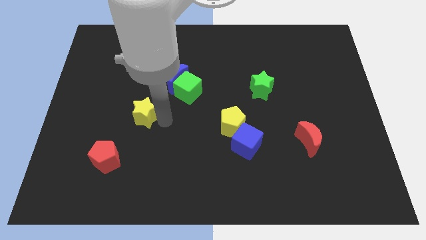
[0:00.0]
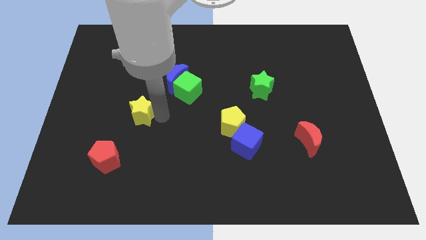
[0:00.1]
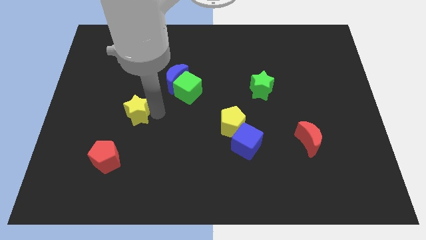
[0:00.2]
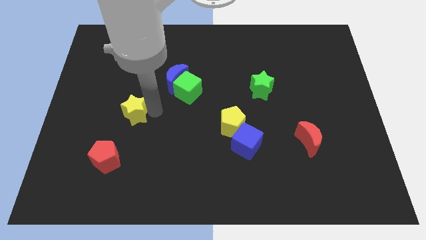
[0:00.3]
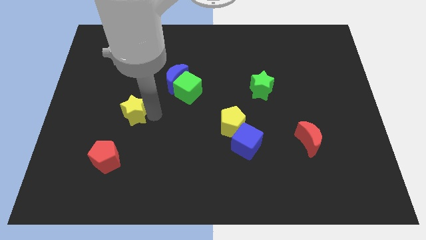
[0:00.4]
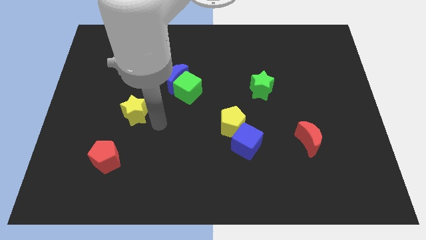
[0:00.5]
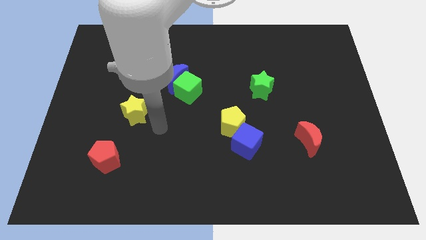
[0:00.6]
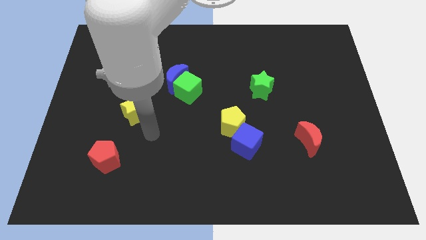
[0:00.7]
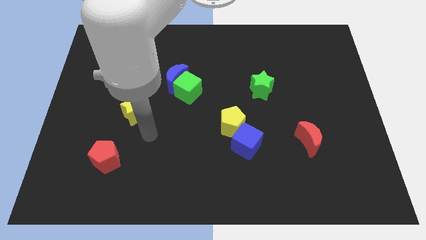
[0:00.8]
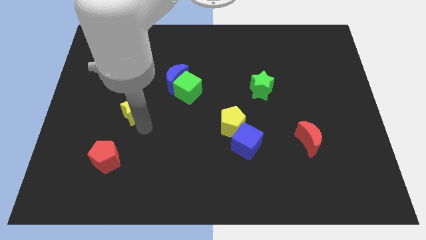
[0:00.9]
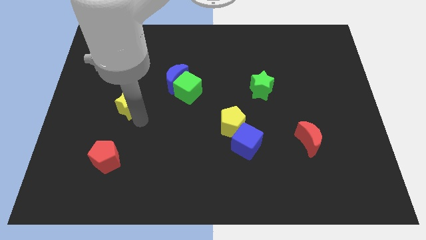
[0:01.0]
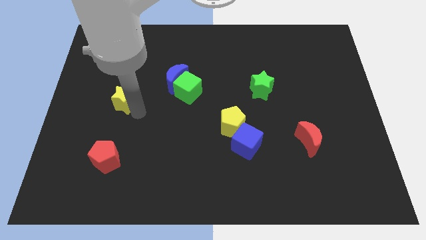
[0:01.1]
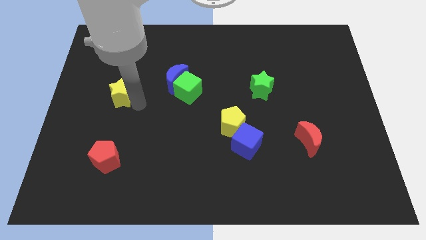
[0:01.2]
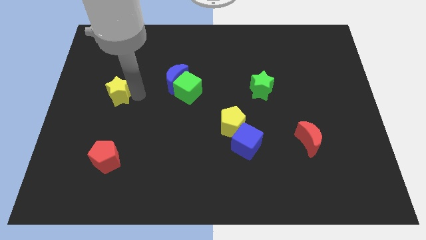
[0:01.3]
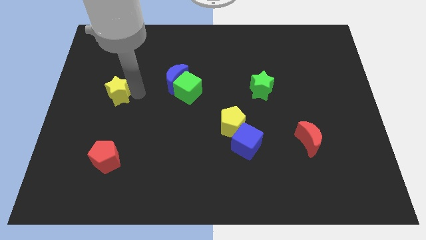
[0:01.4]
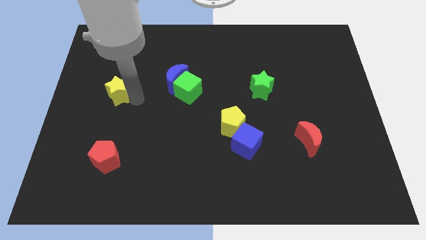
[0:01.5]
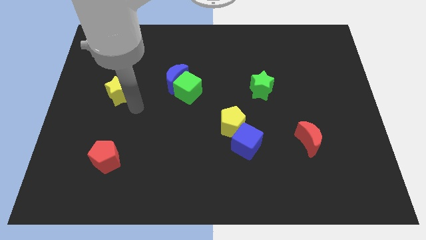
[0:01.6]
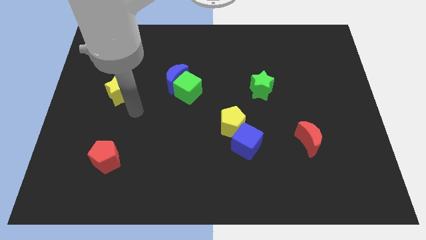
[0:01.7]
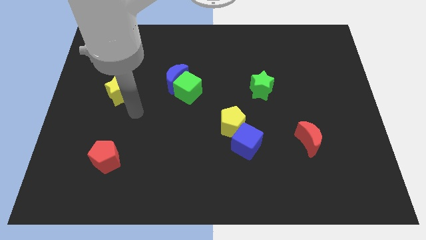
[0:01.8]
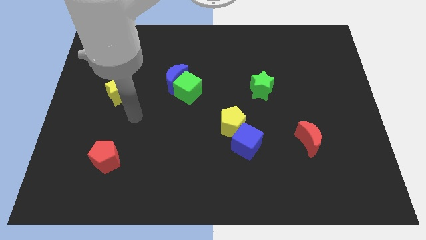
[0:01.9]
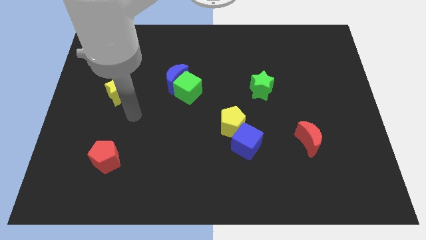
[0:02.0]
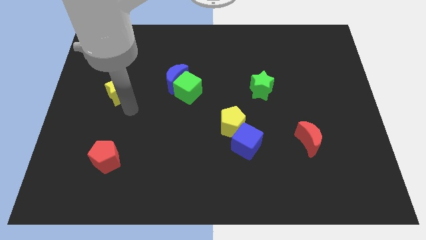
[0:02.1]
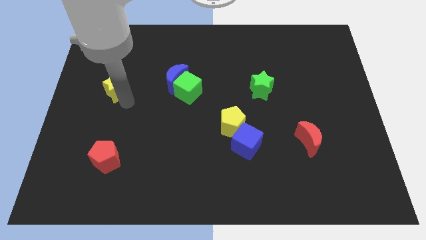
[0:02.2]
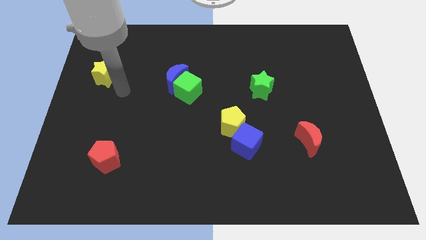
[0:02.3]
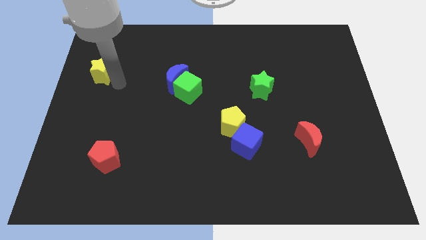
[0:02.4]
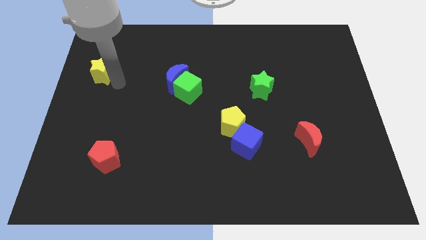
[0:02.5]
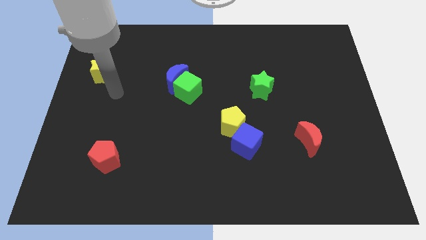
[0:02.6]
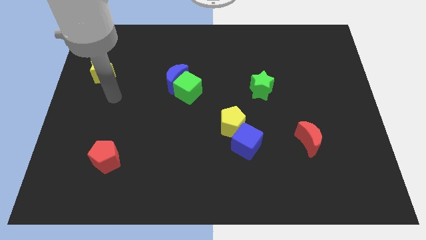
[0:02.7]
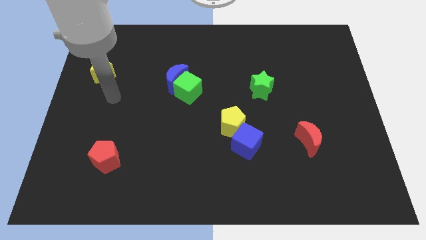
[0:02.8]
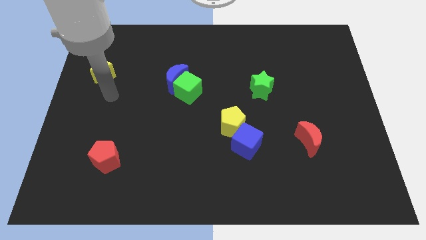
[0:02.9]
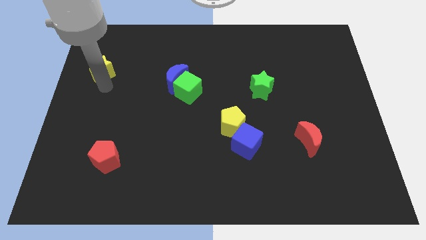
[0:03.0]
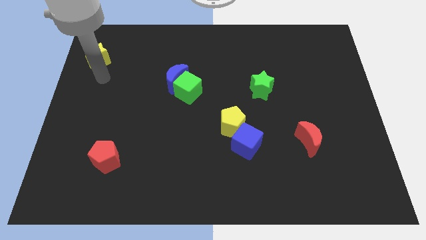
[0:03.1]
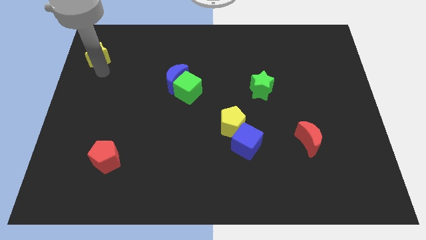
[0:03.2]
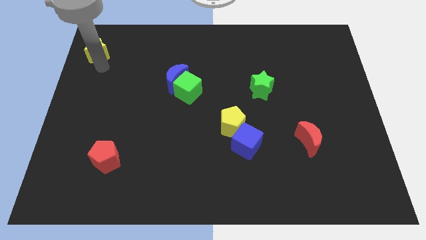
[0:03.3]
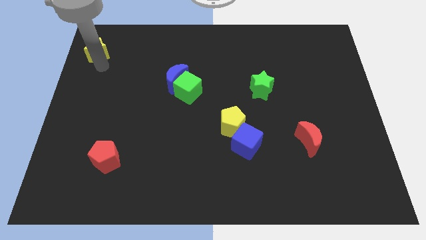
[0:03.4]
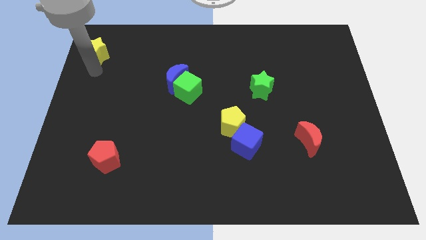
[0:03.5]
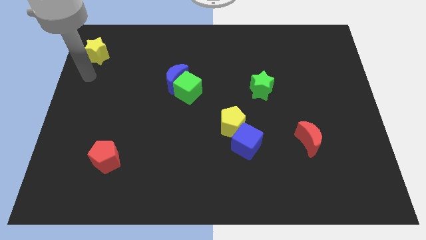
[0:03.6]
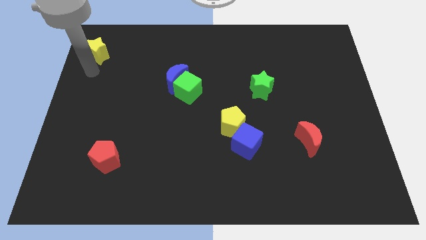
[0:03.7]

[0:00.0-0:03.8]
move the yellow star diagonally top left to the red pentagon

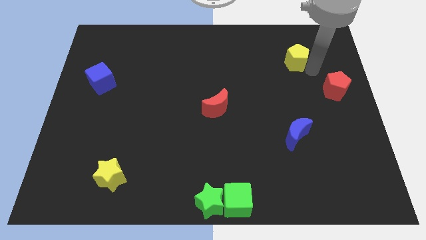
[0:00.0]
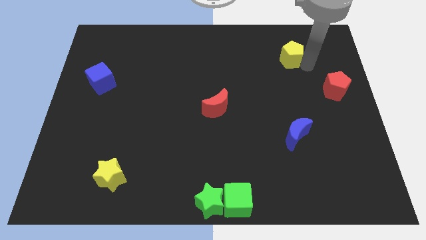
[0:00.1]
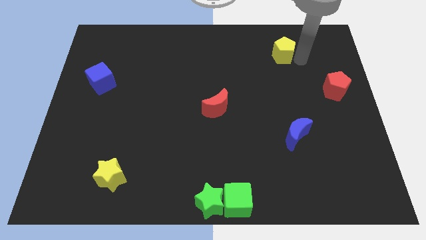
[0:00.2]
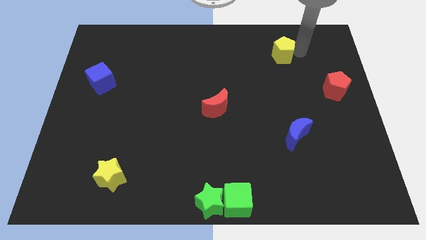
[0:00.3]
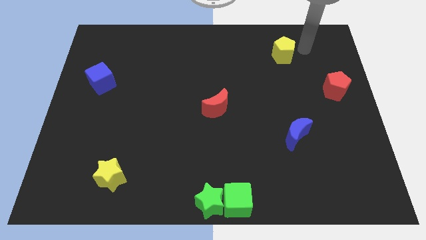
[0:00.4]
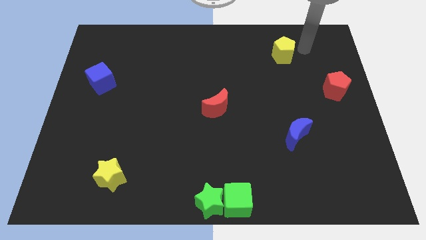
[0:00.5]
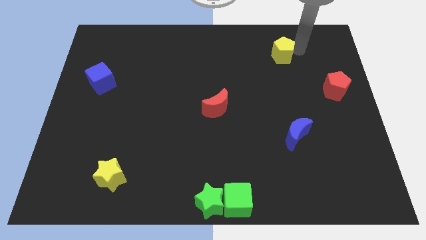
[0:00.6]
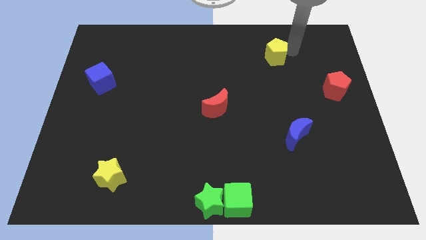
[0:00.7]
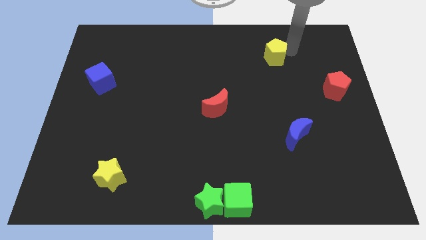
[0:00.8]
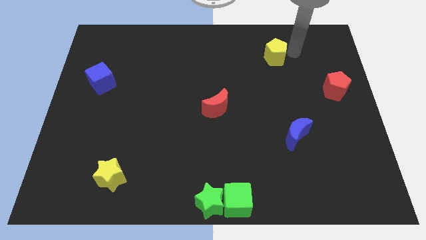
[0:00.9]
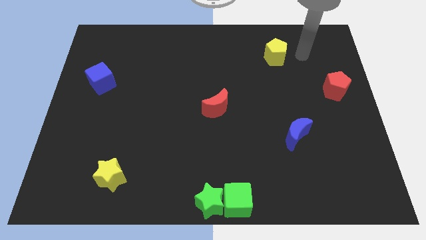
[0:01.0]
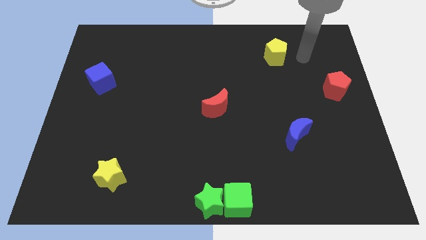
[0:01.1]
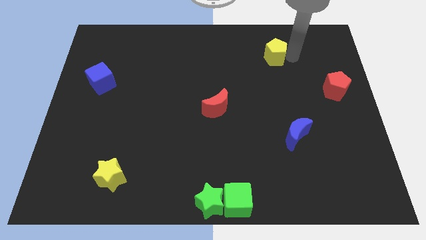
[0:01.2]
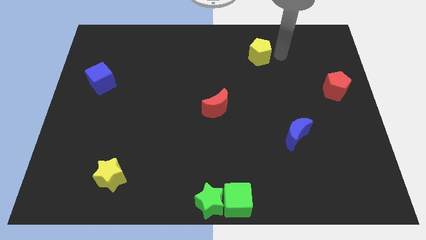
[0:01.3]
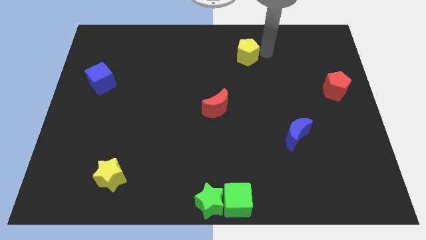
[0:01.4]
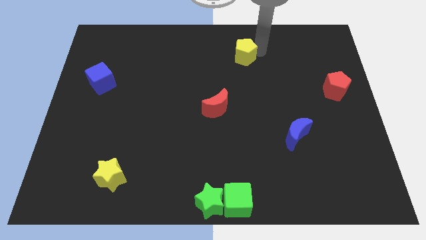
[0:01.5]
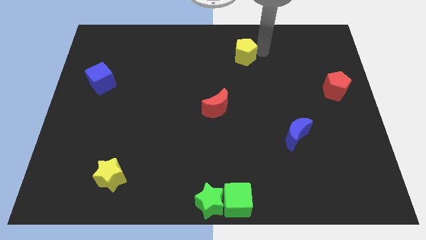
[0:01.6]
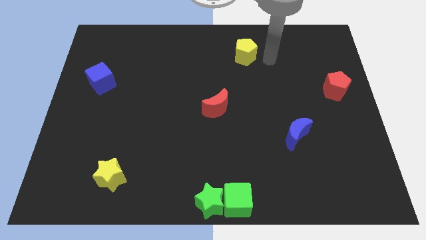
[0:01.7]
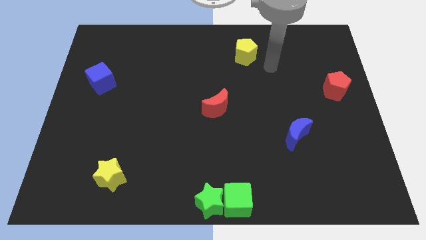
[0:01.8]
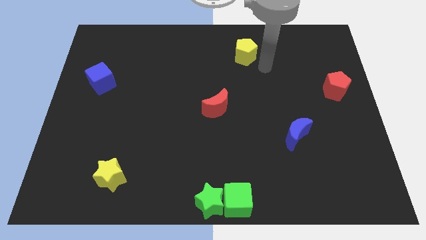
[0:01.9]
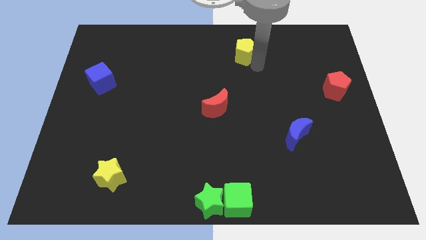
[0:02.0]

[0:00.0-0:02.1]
push the yellow pentagon towards the top center

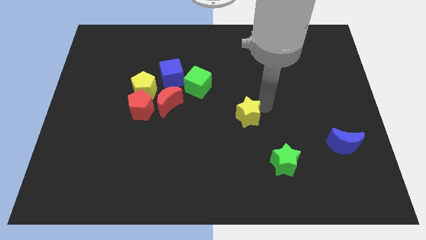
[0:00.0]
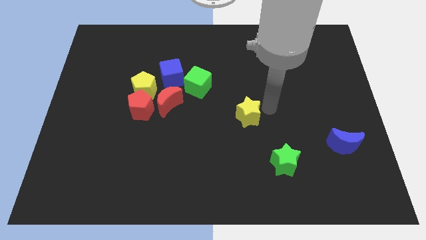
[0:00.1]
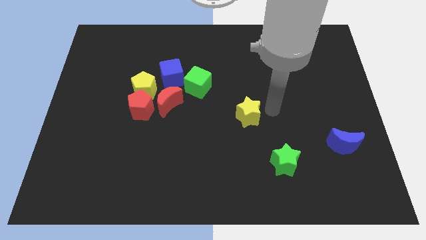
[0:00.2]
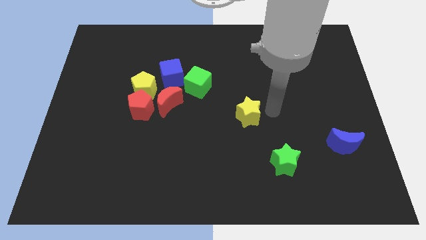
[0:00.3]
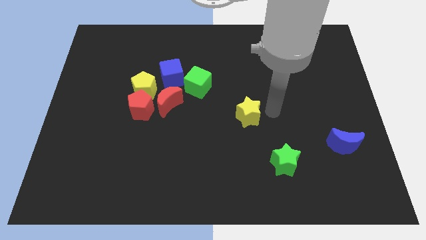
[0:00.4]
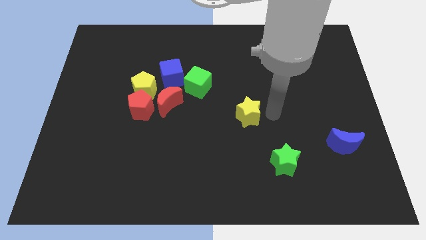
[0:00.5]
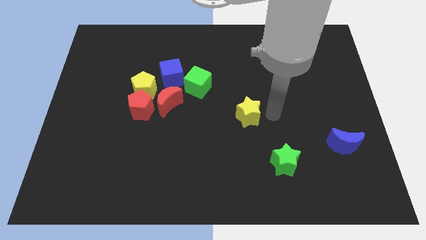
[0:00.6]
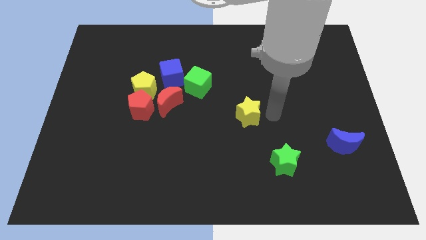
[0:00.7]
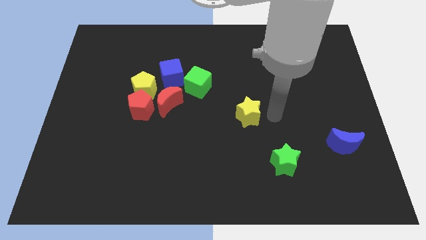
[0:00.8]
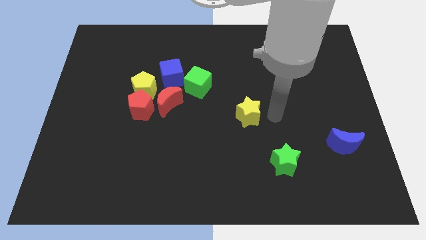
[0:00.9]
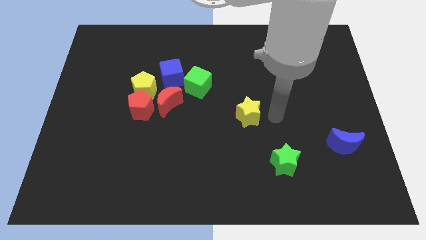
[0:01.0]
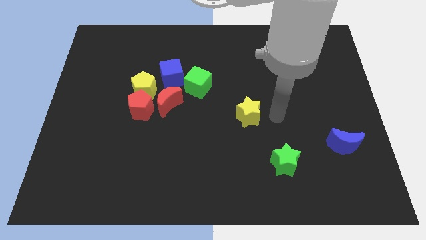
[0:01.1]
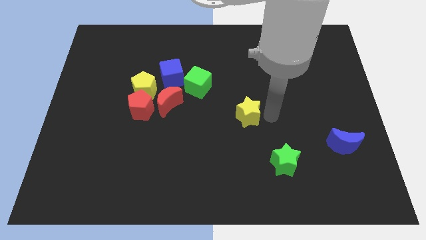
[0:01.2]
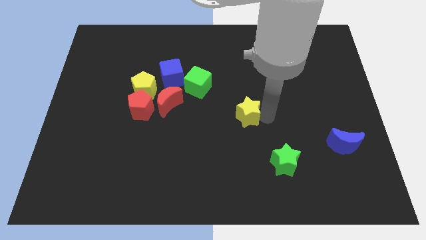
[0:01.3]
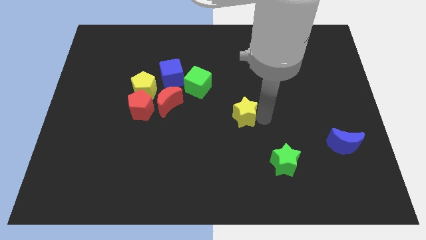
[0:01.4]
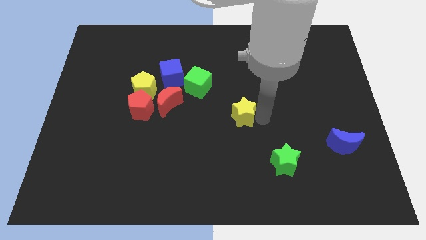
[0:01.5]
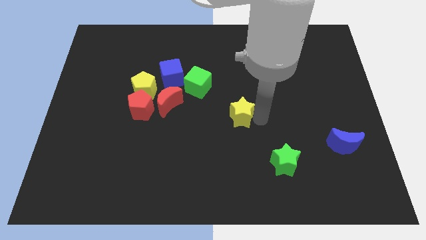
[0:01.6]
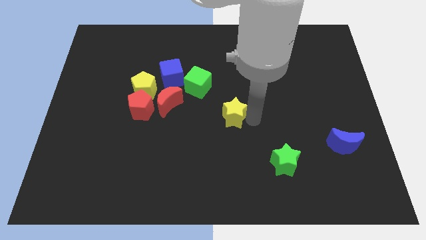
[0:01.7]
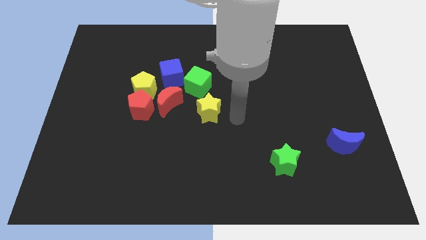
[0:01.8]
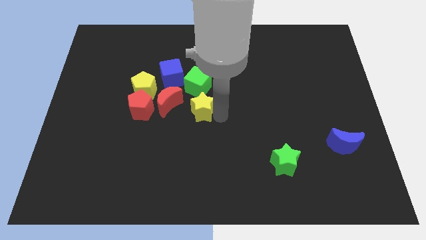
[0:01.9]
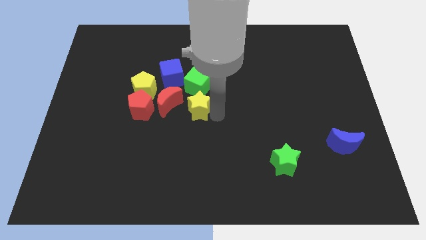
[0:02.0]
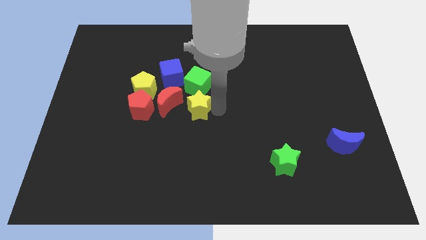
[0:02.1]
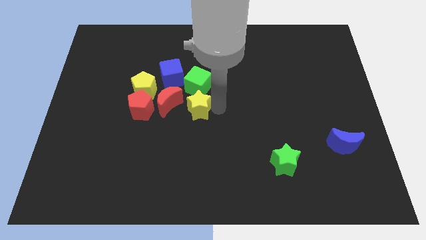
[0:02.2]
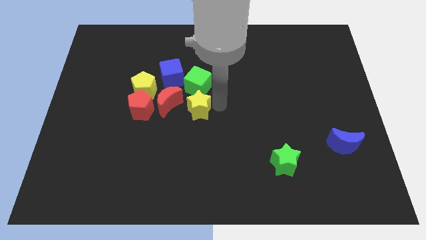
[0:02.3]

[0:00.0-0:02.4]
place the yellow star underneath the green cube

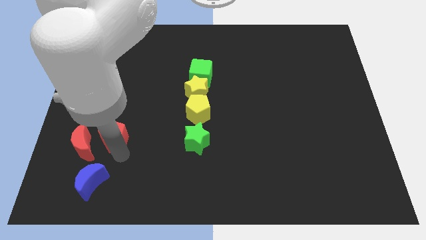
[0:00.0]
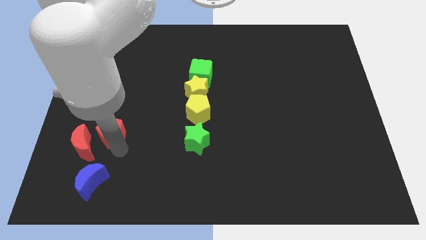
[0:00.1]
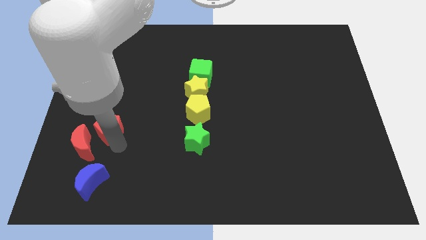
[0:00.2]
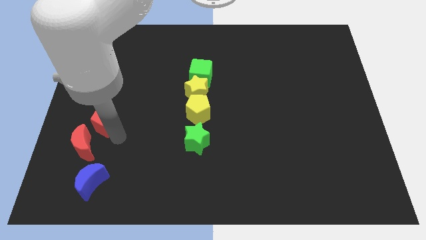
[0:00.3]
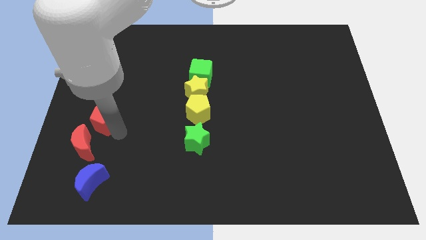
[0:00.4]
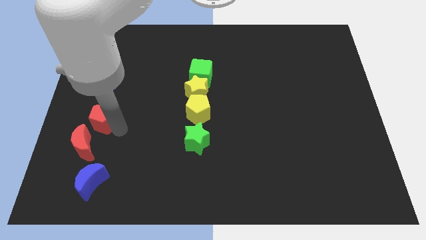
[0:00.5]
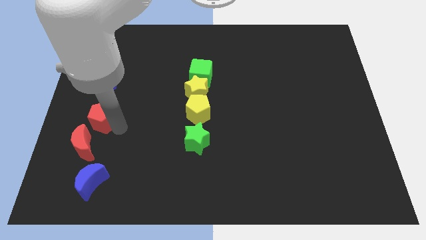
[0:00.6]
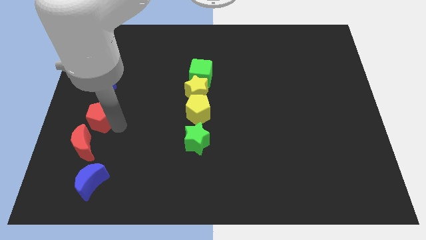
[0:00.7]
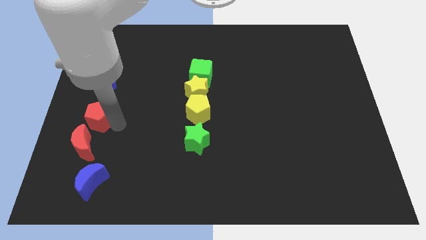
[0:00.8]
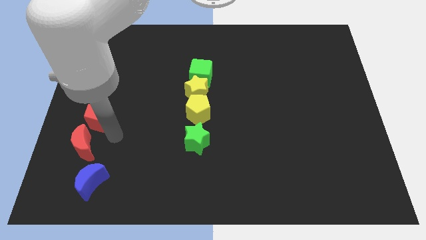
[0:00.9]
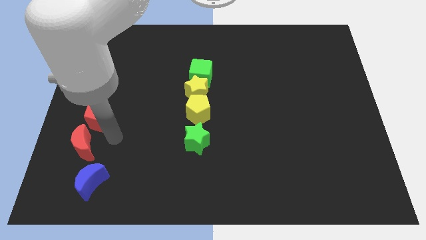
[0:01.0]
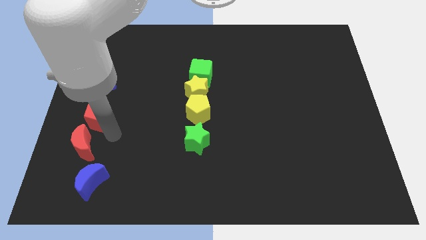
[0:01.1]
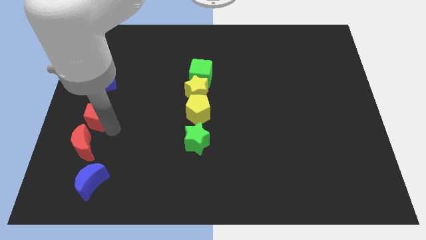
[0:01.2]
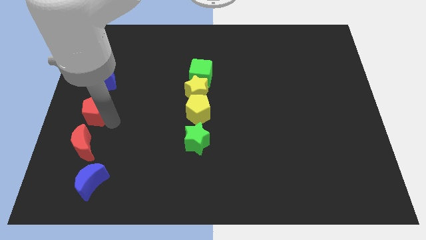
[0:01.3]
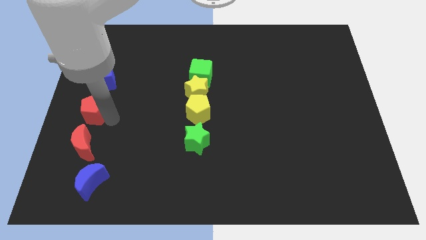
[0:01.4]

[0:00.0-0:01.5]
place the red pentagon to the top of the red crescent
